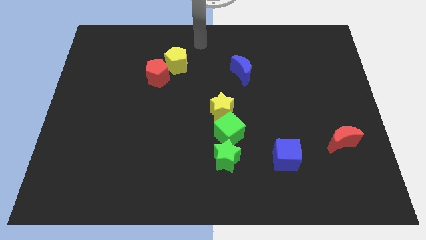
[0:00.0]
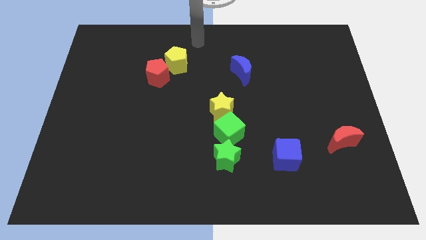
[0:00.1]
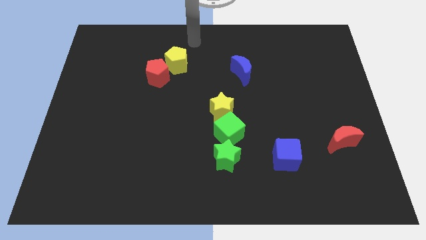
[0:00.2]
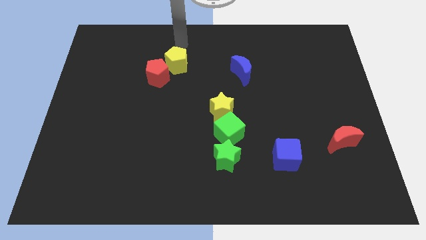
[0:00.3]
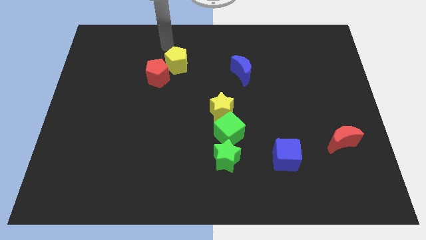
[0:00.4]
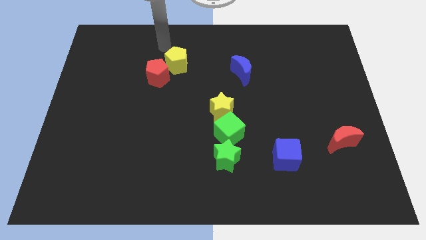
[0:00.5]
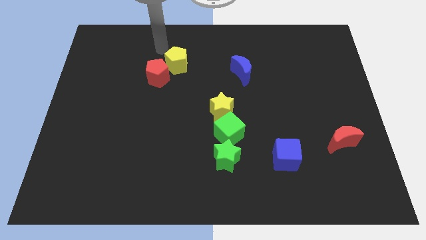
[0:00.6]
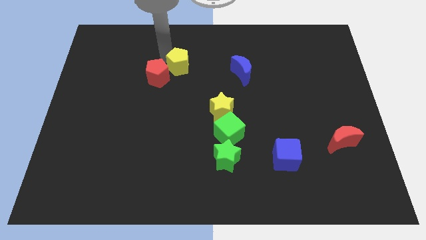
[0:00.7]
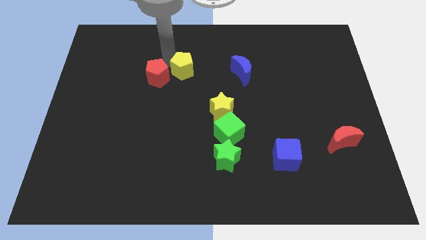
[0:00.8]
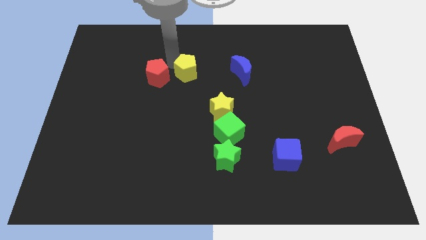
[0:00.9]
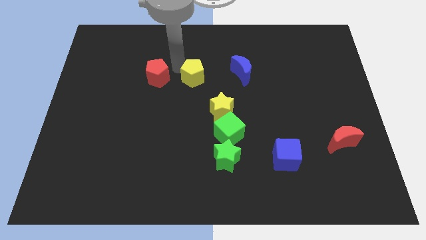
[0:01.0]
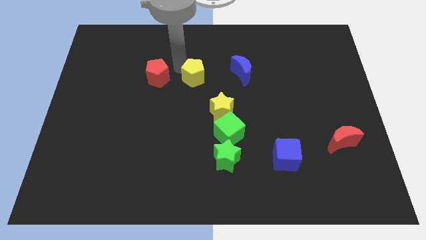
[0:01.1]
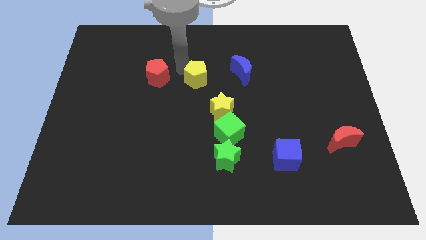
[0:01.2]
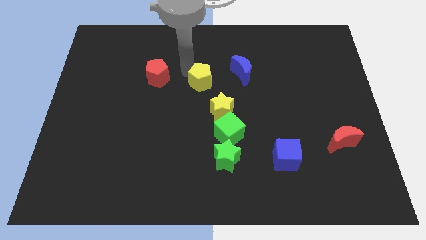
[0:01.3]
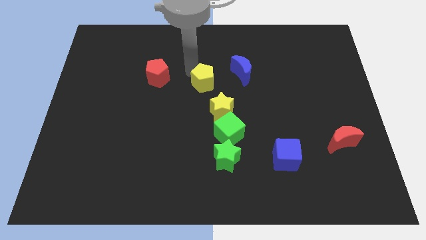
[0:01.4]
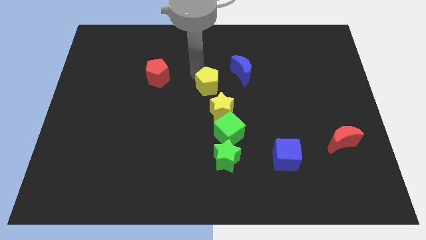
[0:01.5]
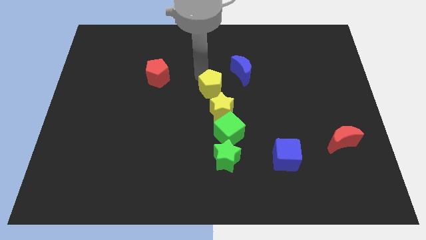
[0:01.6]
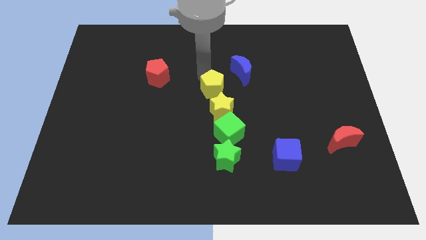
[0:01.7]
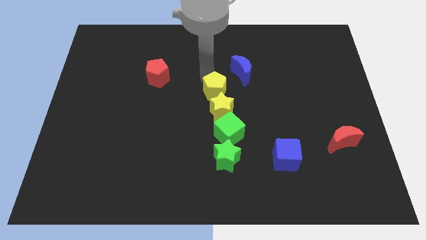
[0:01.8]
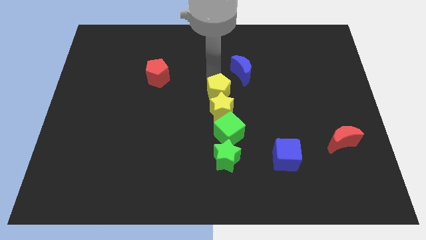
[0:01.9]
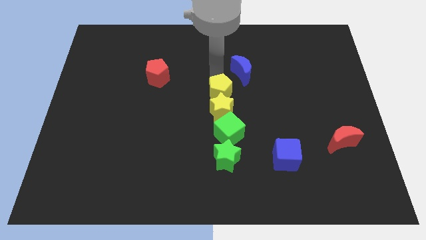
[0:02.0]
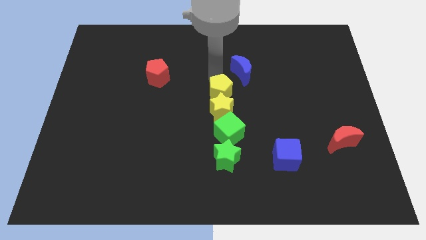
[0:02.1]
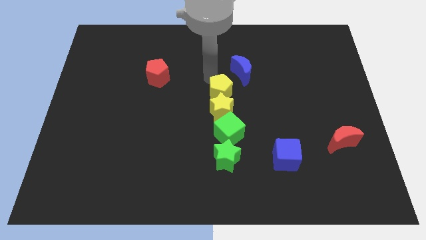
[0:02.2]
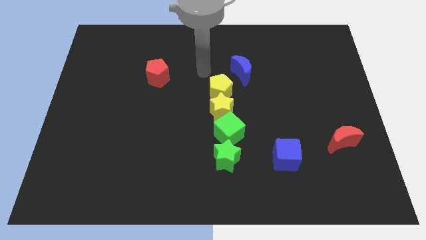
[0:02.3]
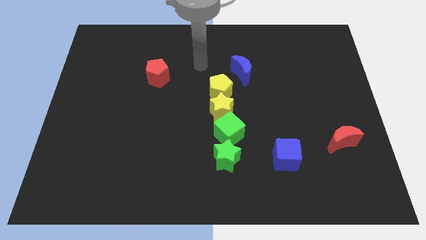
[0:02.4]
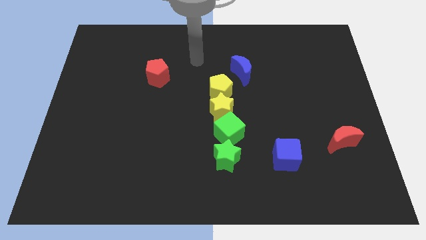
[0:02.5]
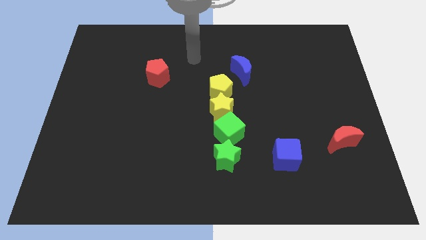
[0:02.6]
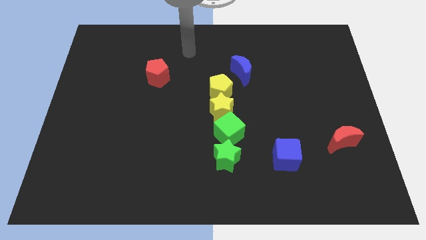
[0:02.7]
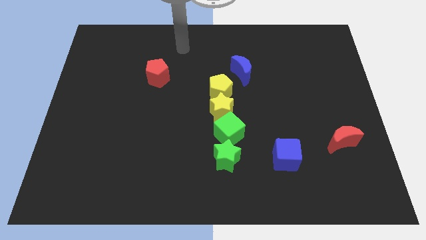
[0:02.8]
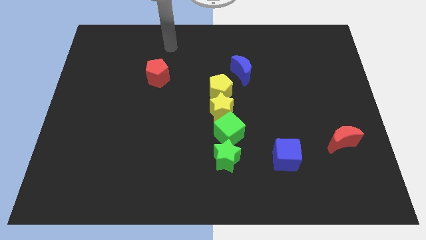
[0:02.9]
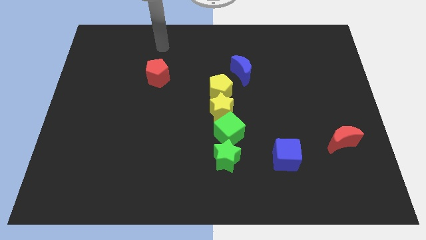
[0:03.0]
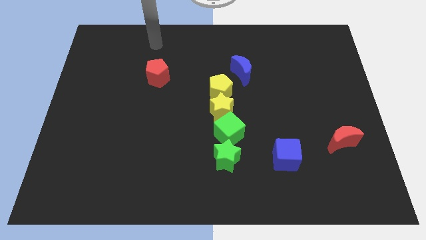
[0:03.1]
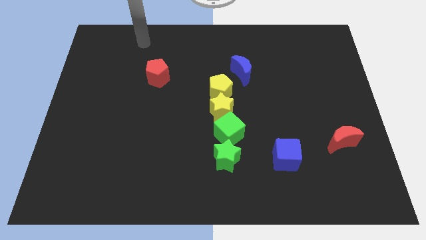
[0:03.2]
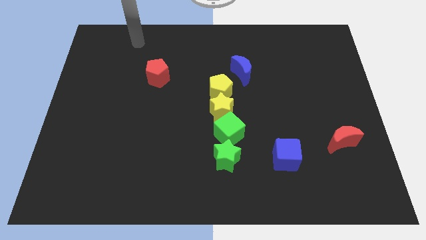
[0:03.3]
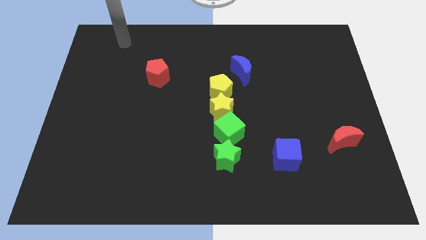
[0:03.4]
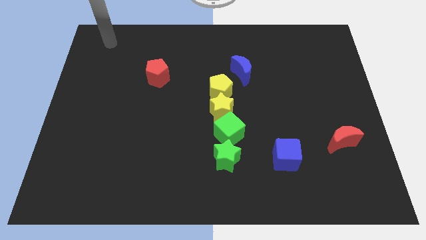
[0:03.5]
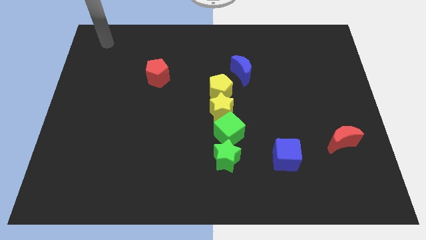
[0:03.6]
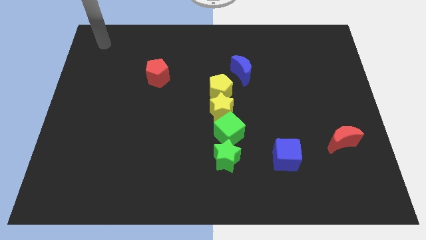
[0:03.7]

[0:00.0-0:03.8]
place yellow pentagon above yellow star

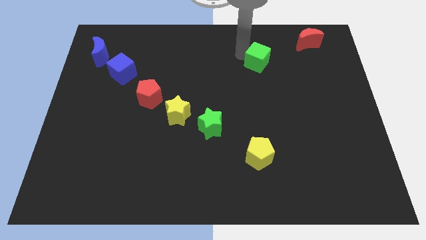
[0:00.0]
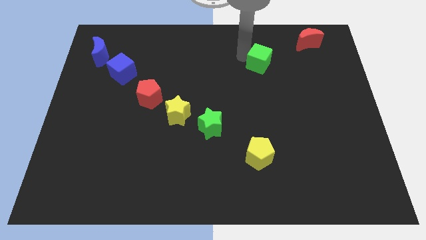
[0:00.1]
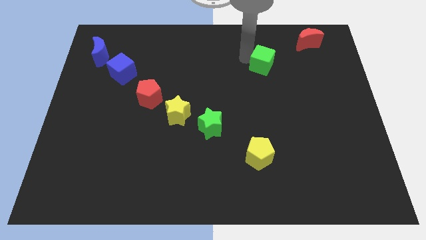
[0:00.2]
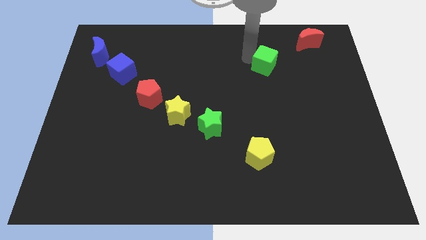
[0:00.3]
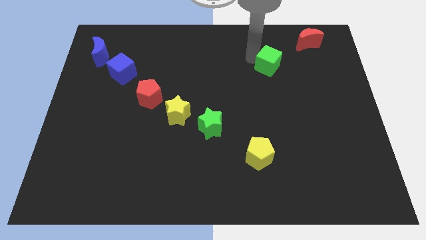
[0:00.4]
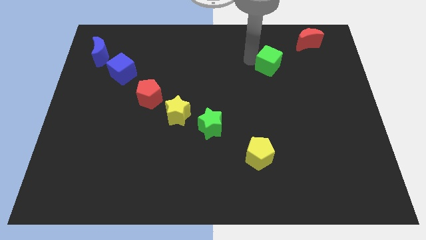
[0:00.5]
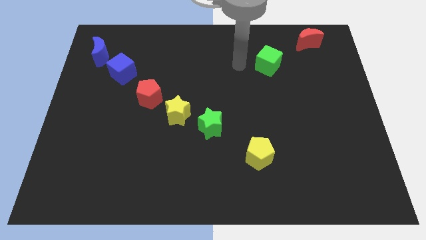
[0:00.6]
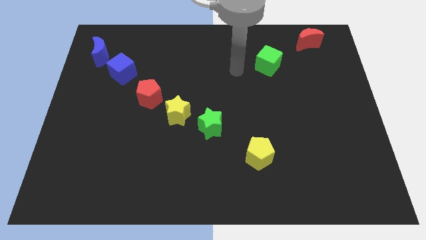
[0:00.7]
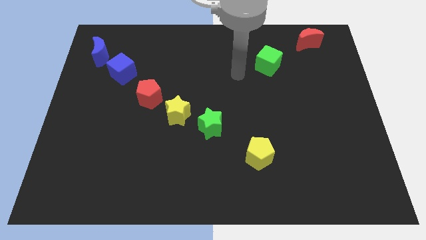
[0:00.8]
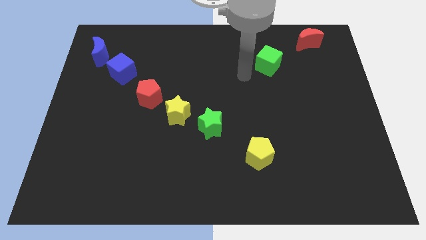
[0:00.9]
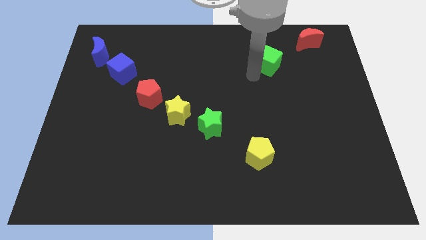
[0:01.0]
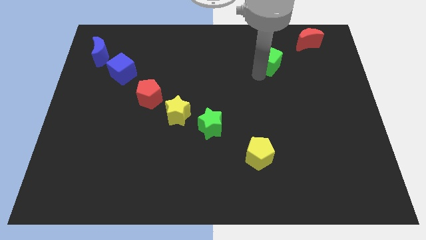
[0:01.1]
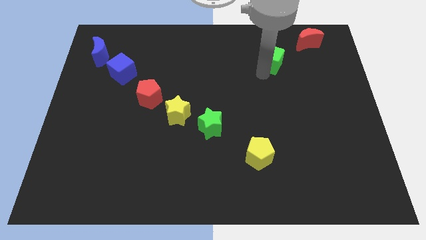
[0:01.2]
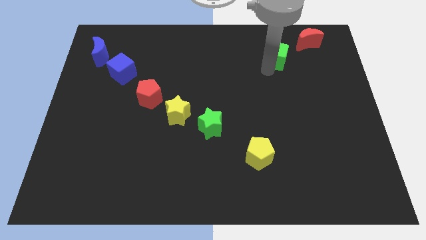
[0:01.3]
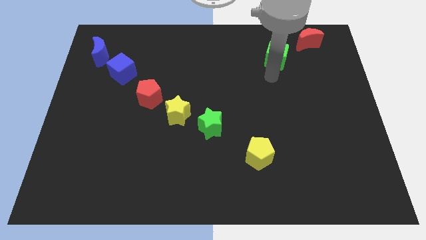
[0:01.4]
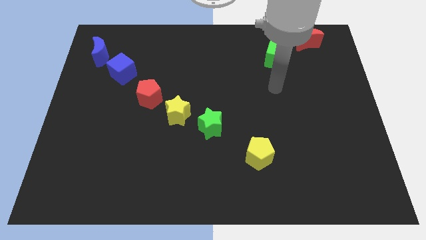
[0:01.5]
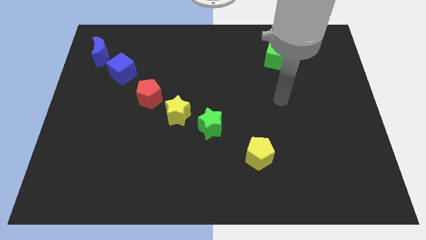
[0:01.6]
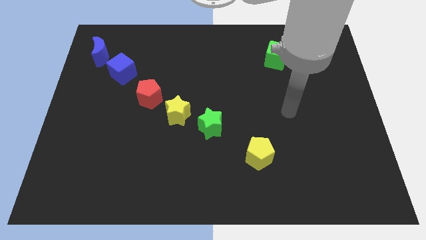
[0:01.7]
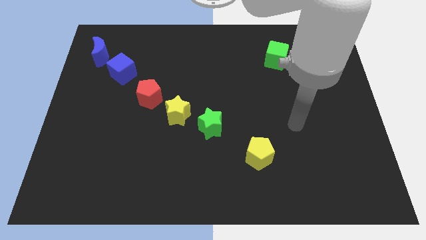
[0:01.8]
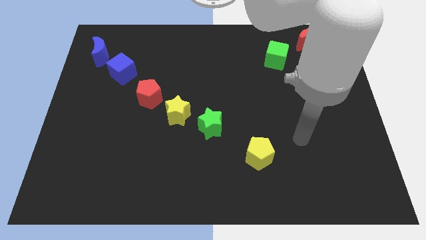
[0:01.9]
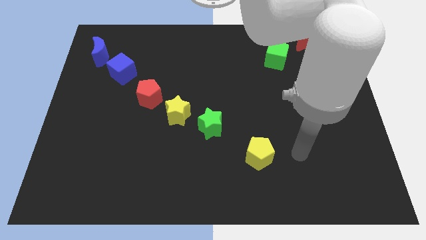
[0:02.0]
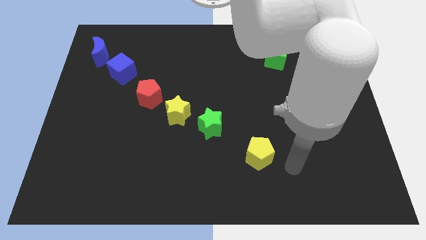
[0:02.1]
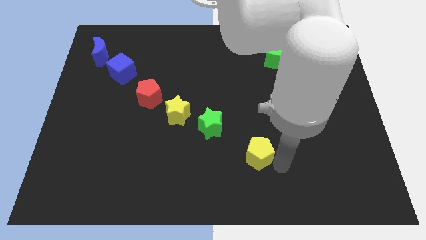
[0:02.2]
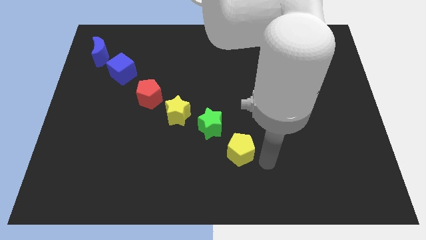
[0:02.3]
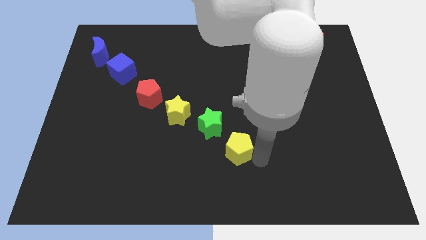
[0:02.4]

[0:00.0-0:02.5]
place the green cube parallel to red crescent

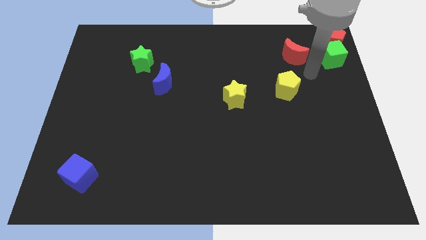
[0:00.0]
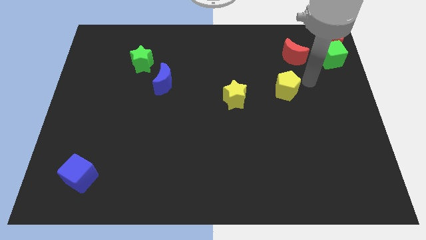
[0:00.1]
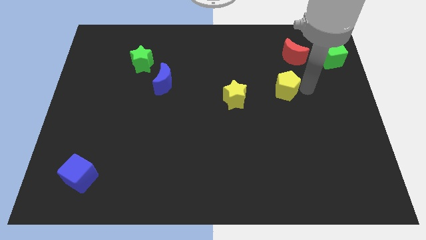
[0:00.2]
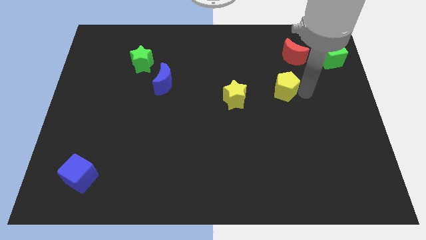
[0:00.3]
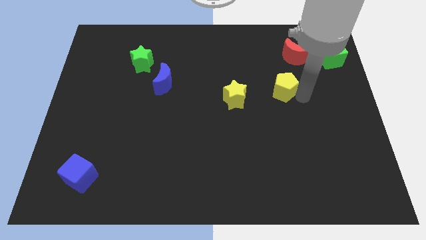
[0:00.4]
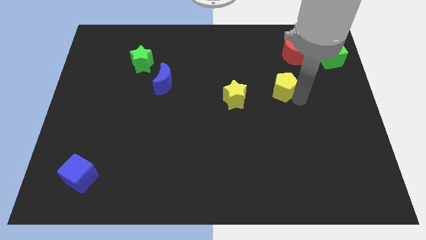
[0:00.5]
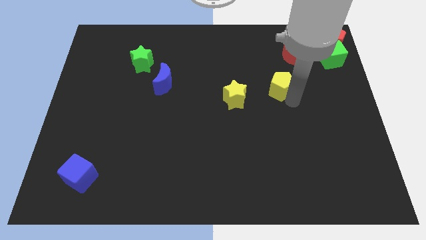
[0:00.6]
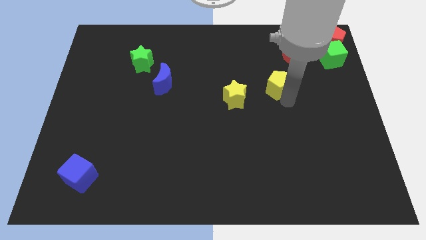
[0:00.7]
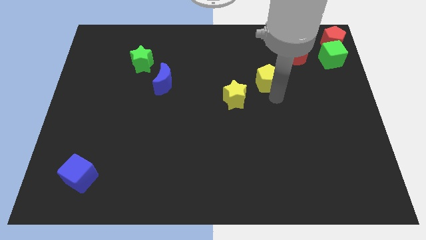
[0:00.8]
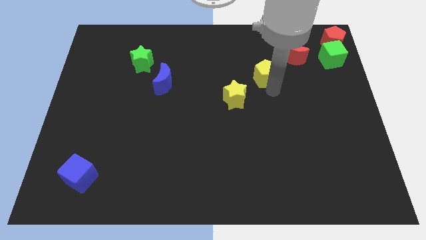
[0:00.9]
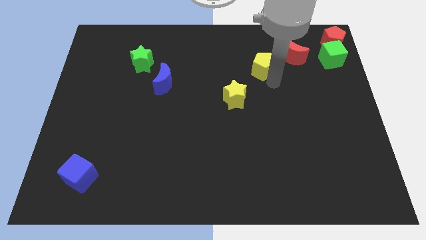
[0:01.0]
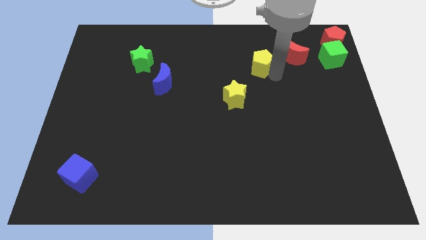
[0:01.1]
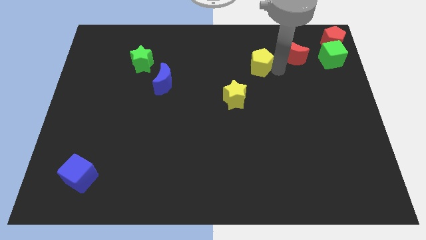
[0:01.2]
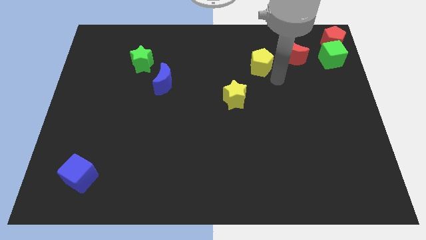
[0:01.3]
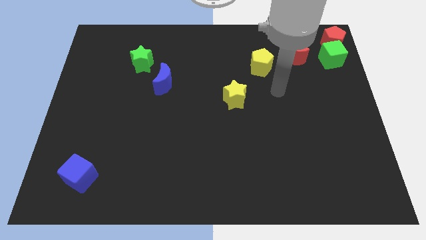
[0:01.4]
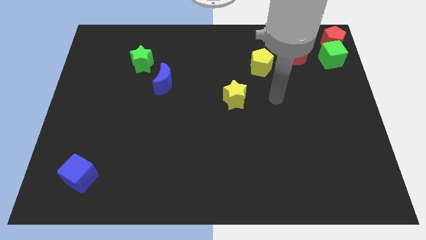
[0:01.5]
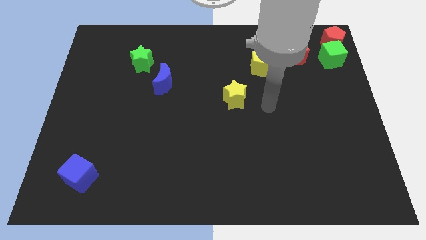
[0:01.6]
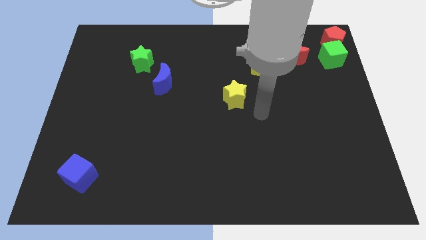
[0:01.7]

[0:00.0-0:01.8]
push the yellow pentagon to the left of red moon

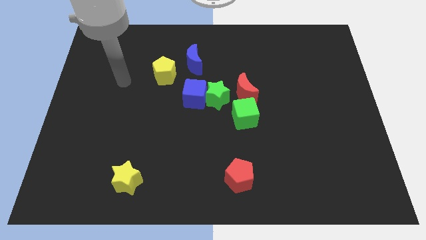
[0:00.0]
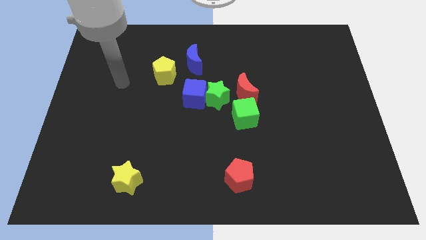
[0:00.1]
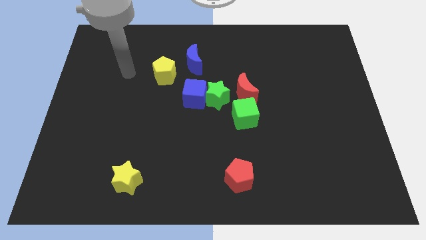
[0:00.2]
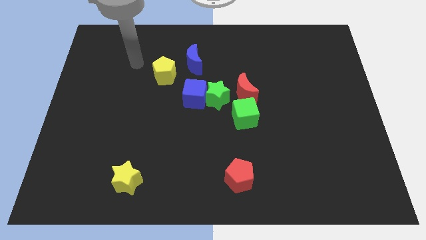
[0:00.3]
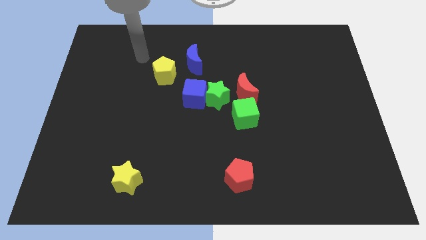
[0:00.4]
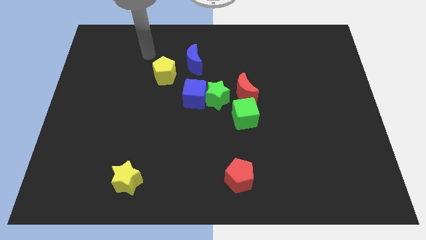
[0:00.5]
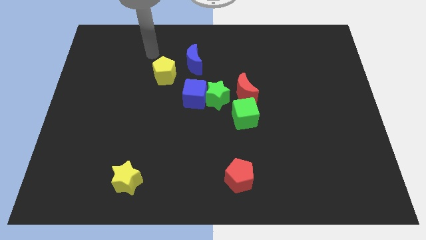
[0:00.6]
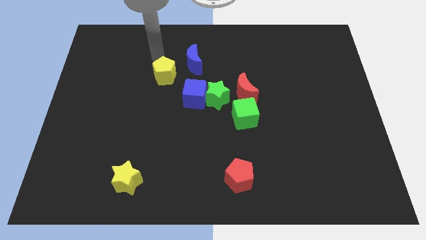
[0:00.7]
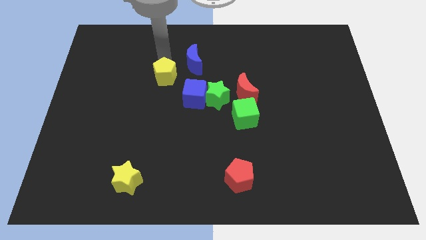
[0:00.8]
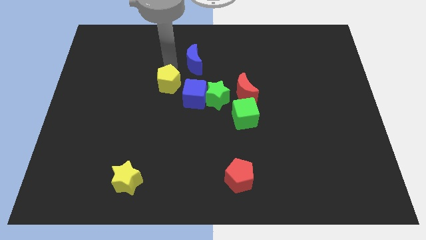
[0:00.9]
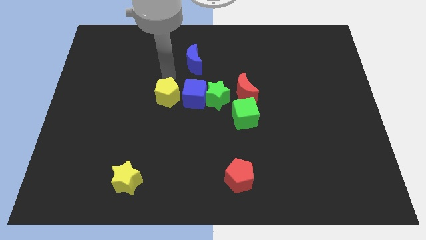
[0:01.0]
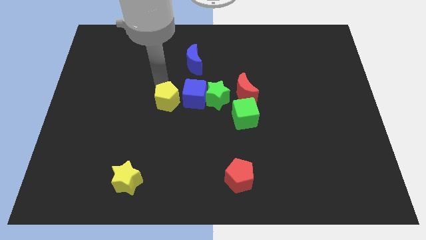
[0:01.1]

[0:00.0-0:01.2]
push the yellow pentagon below the blue cube
